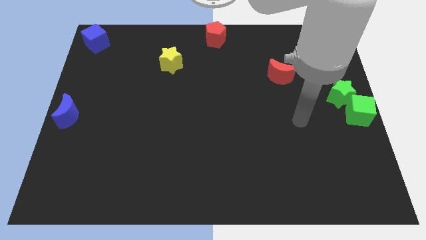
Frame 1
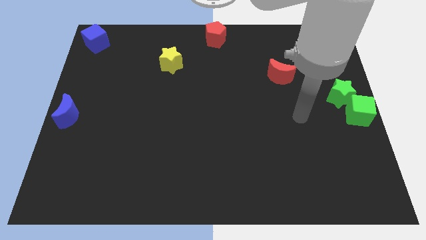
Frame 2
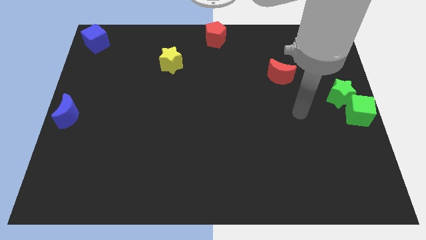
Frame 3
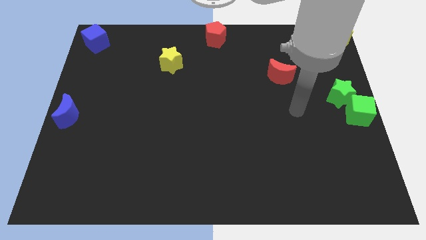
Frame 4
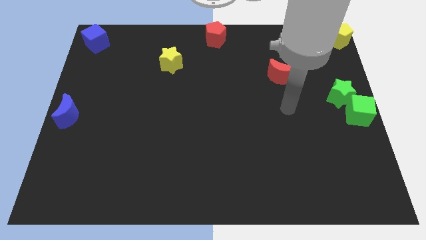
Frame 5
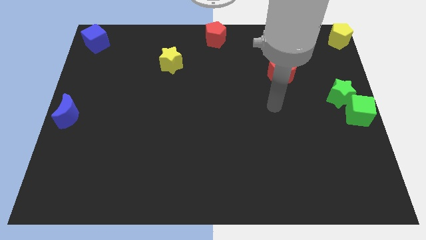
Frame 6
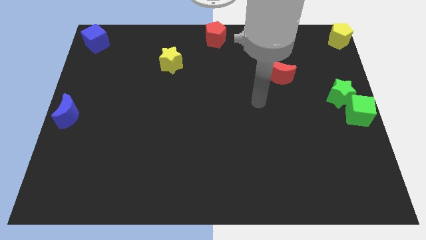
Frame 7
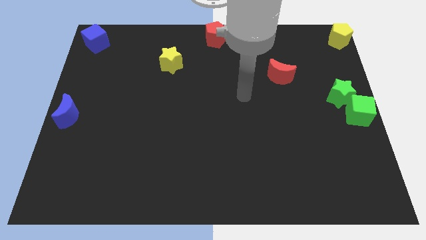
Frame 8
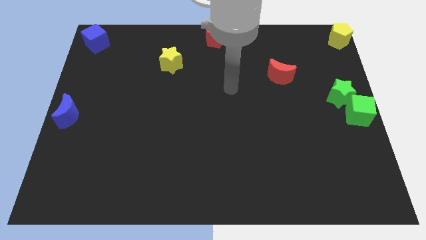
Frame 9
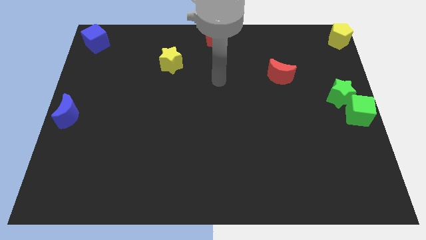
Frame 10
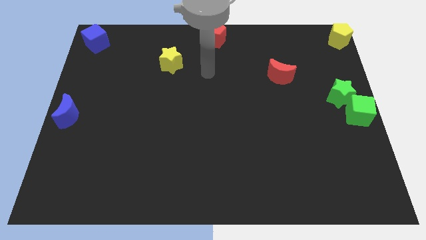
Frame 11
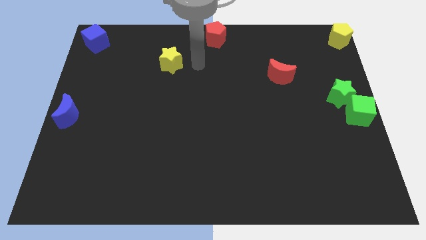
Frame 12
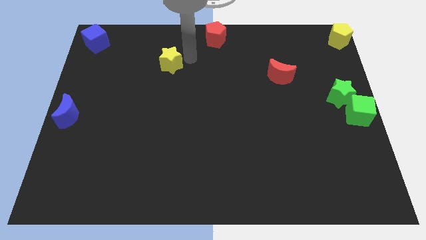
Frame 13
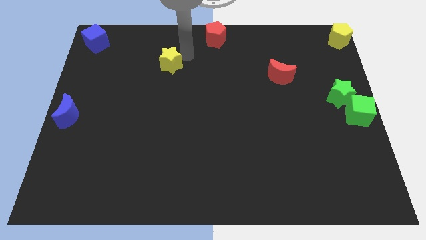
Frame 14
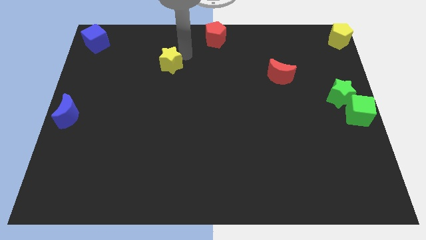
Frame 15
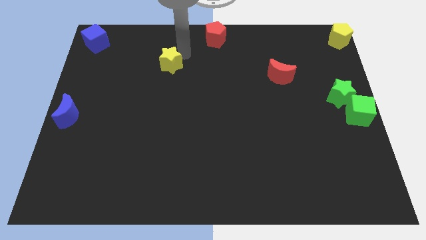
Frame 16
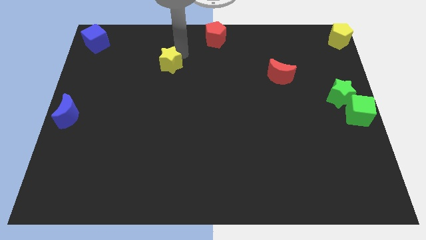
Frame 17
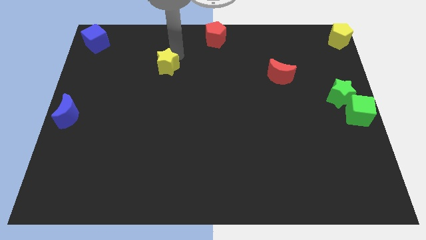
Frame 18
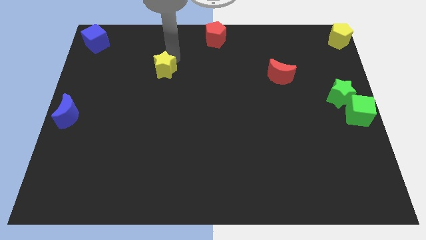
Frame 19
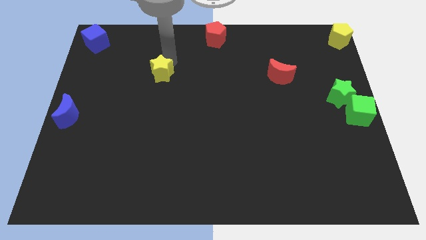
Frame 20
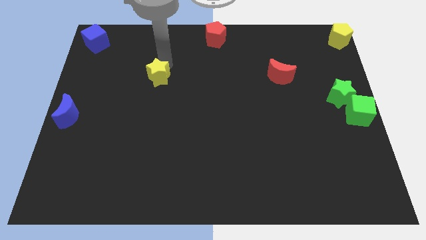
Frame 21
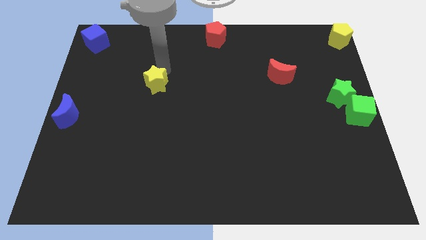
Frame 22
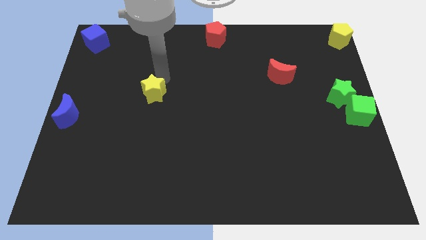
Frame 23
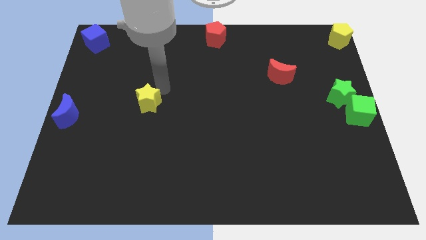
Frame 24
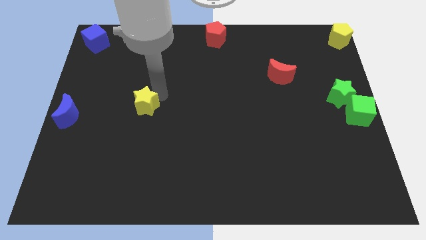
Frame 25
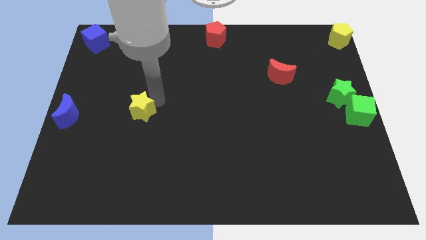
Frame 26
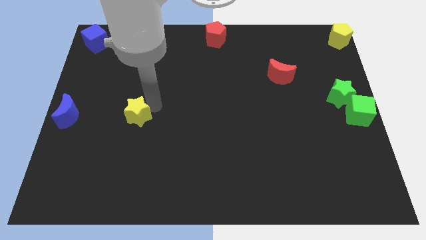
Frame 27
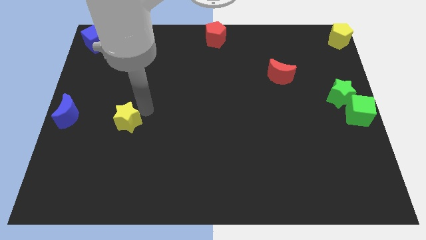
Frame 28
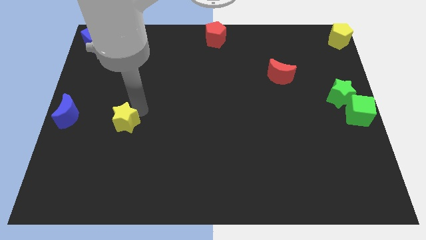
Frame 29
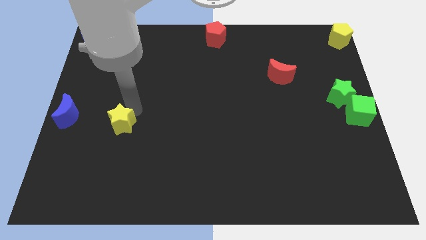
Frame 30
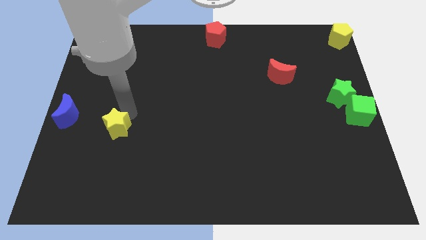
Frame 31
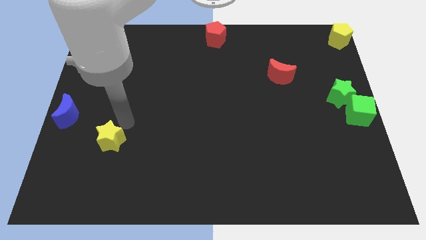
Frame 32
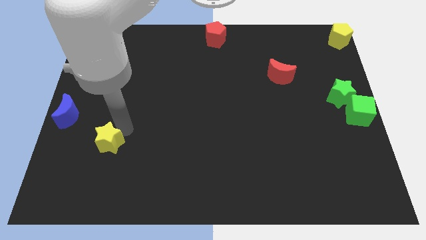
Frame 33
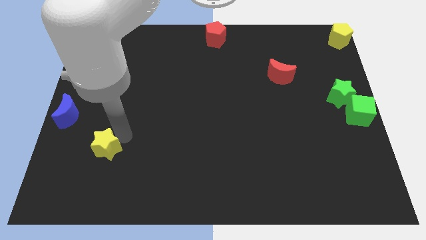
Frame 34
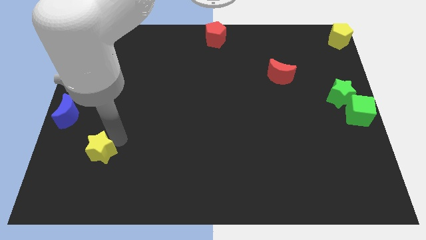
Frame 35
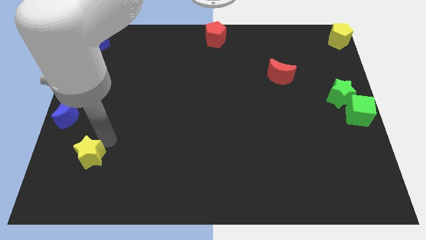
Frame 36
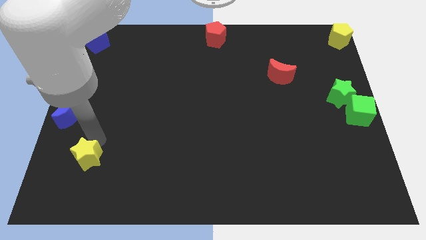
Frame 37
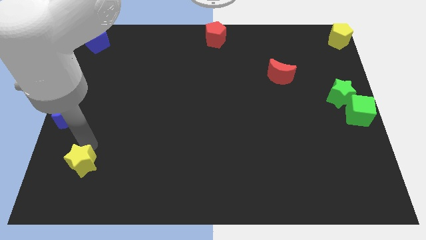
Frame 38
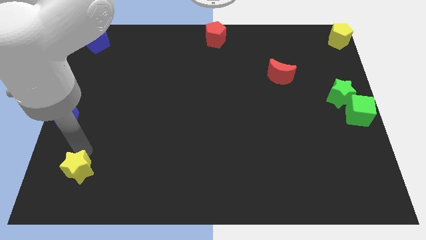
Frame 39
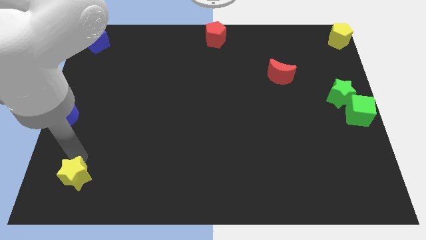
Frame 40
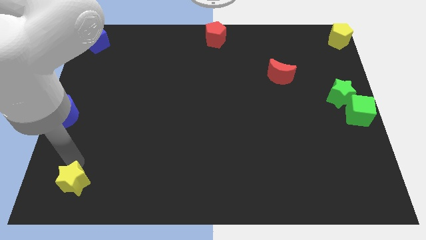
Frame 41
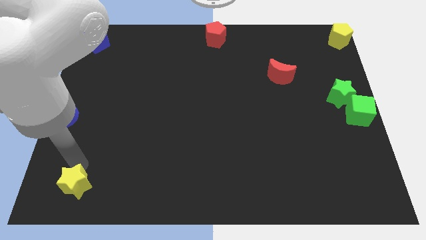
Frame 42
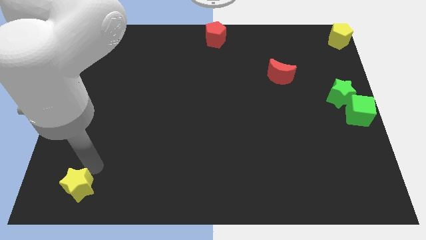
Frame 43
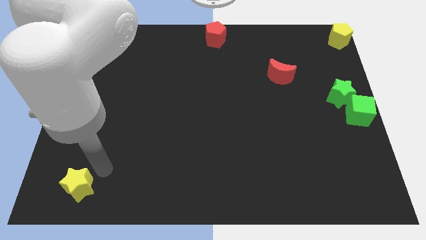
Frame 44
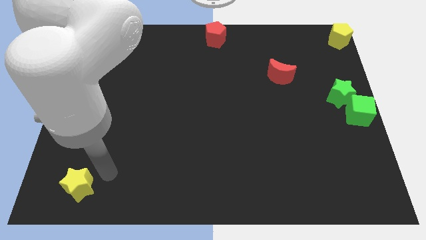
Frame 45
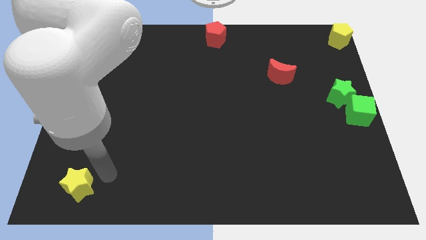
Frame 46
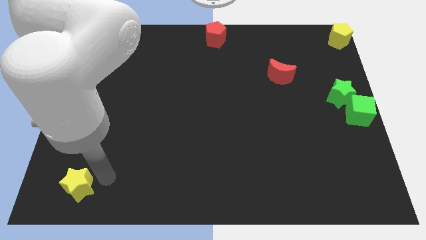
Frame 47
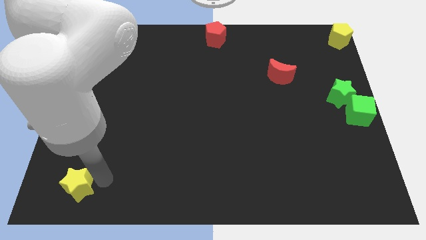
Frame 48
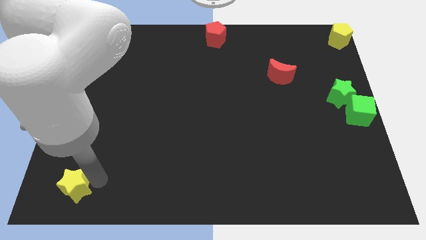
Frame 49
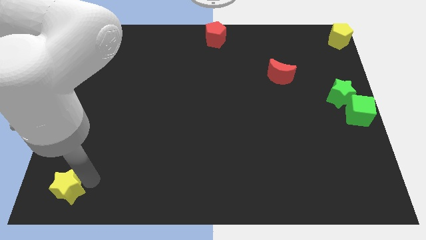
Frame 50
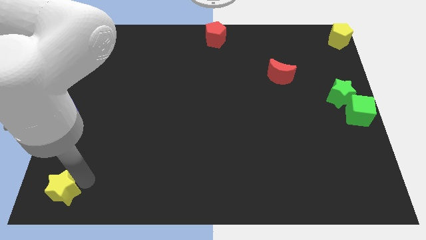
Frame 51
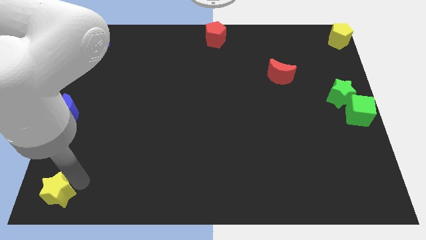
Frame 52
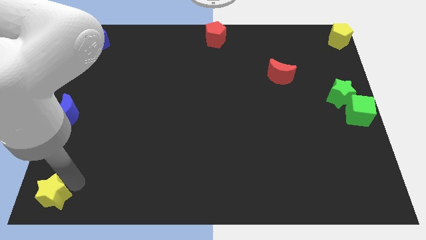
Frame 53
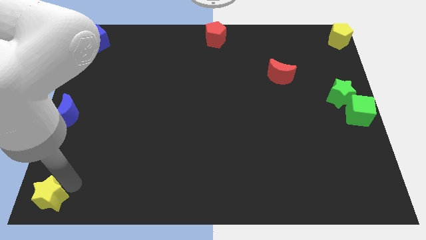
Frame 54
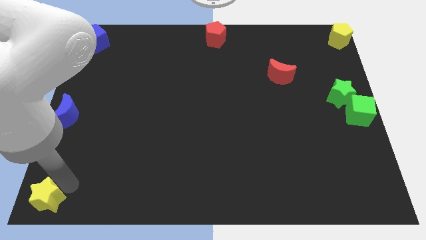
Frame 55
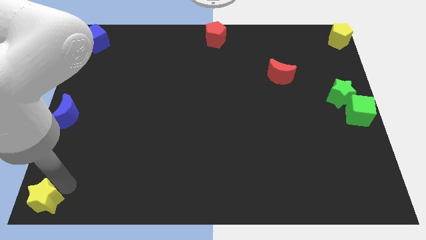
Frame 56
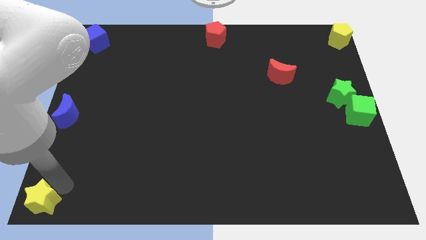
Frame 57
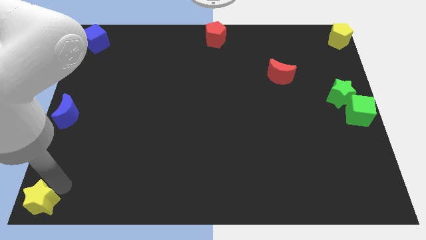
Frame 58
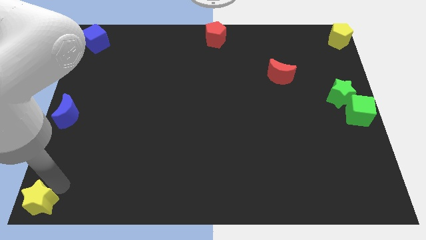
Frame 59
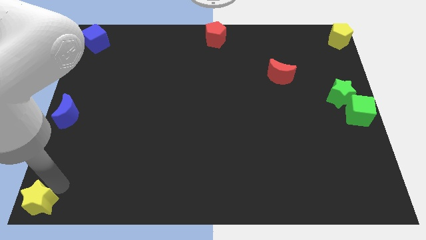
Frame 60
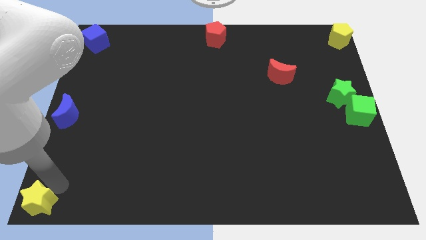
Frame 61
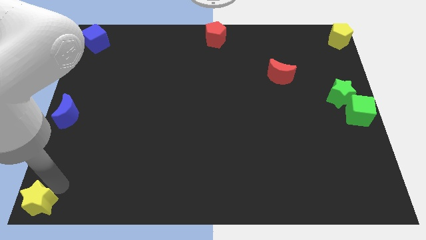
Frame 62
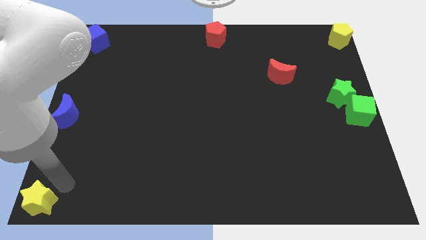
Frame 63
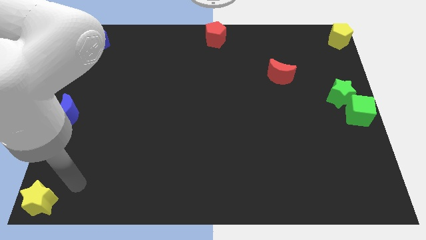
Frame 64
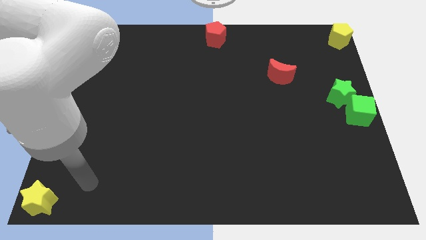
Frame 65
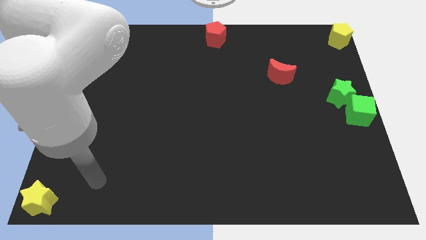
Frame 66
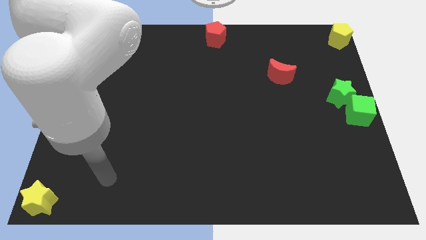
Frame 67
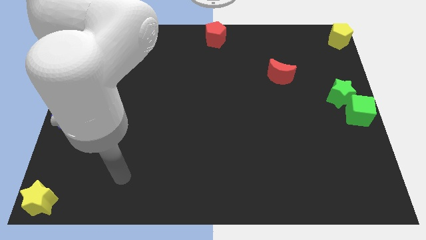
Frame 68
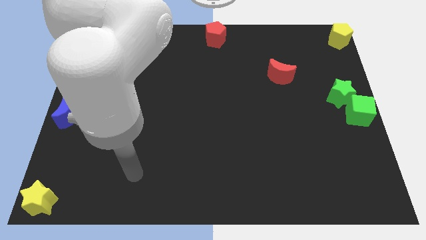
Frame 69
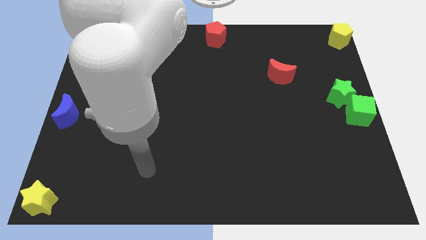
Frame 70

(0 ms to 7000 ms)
move yellow star to bottom left corner

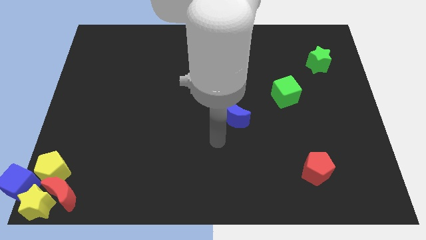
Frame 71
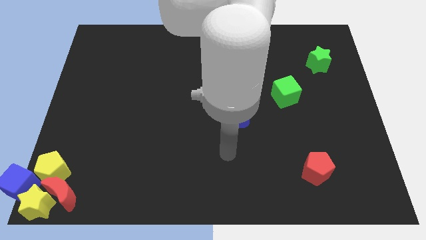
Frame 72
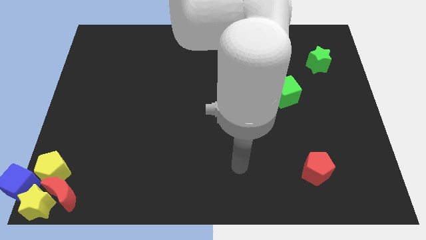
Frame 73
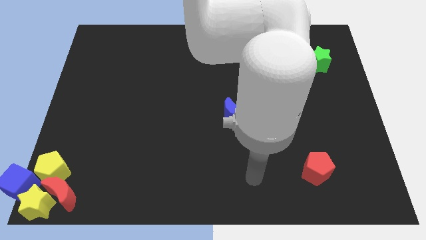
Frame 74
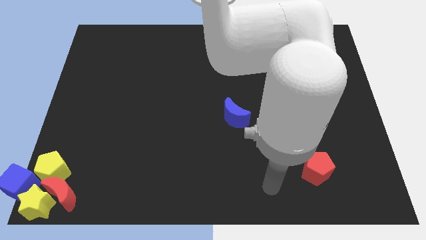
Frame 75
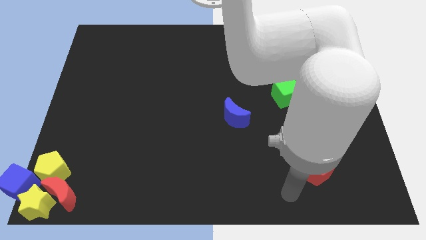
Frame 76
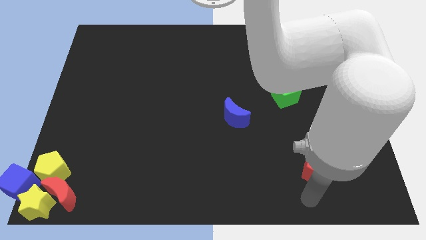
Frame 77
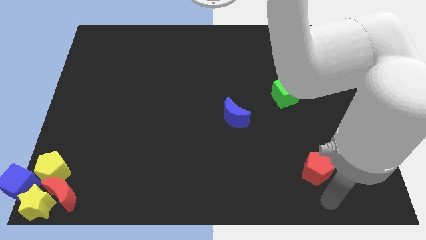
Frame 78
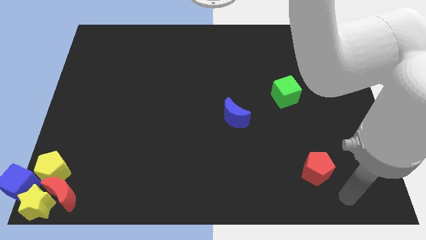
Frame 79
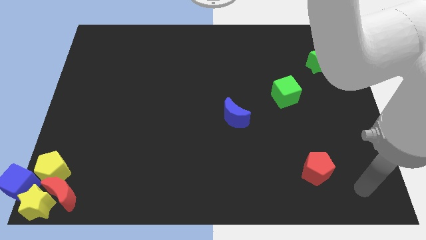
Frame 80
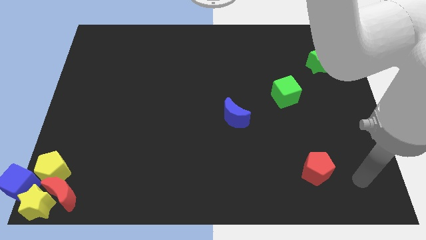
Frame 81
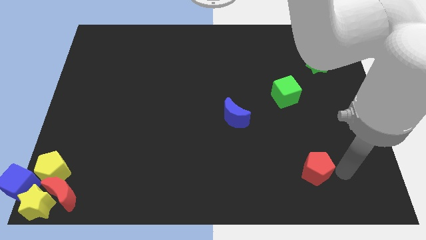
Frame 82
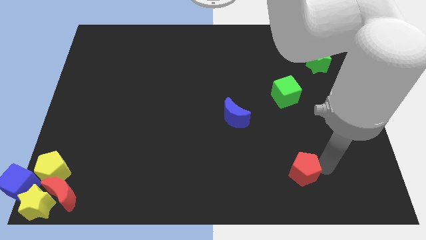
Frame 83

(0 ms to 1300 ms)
touch the bottom of red pentagon

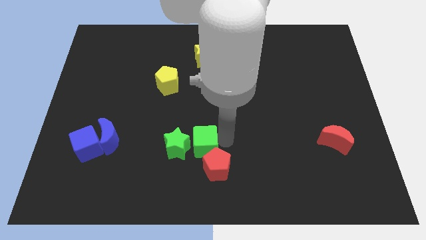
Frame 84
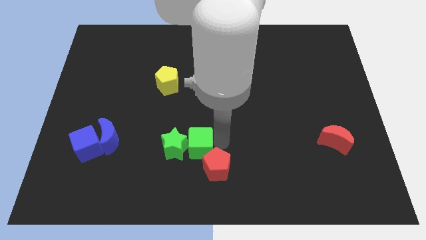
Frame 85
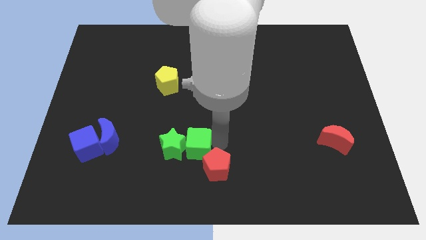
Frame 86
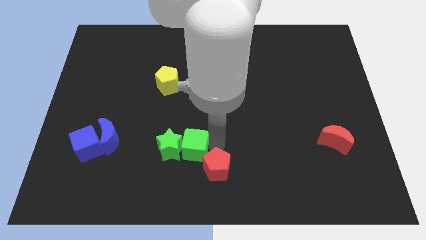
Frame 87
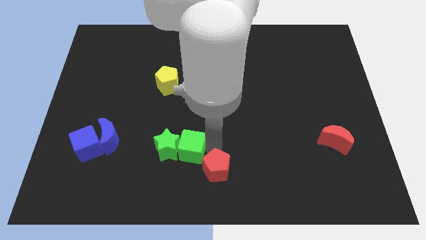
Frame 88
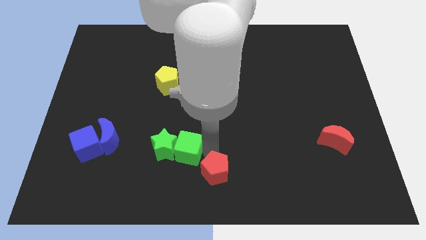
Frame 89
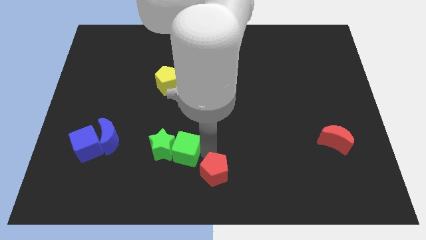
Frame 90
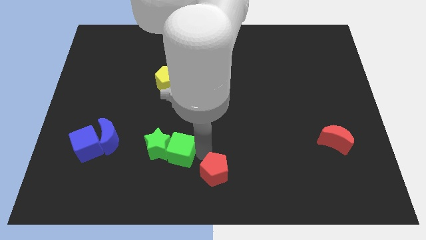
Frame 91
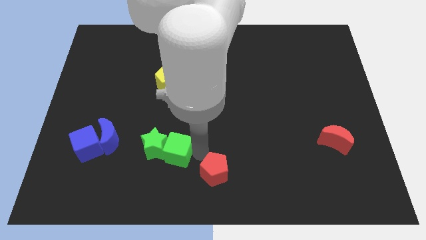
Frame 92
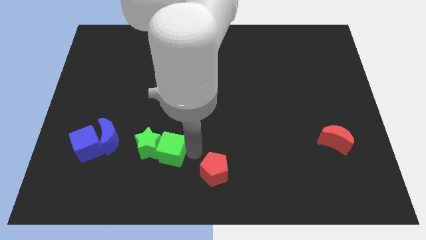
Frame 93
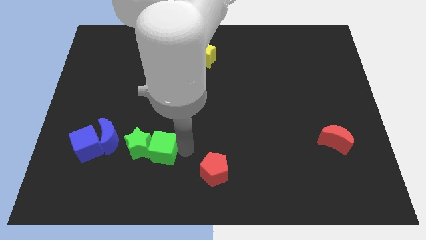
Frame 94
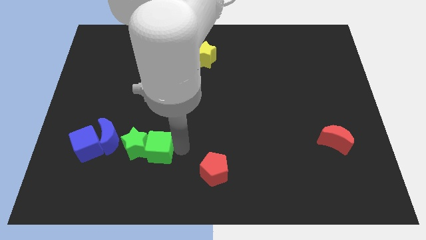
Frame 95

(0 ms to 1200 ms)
push the green star with green cube towards the bottom left of the board
